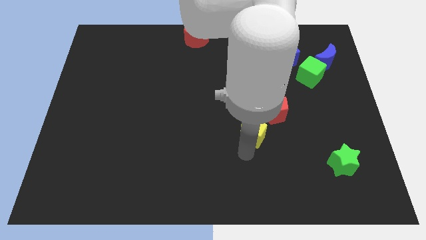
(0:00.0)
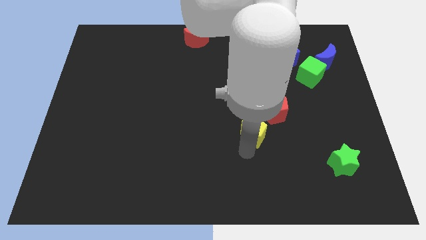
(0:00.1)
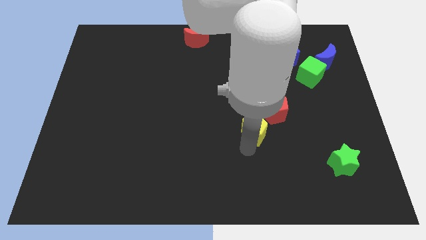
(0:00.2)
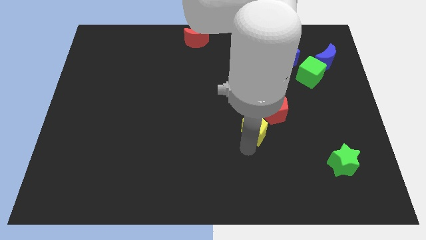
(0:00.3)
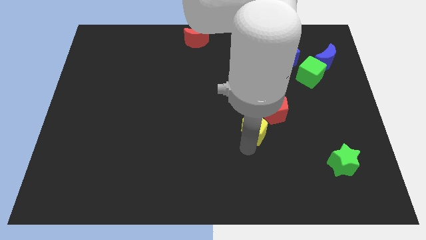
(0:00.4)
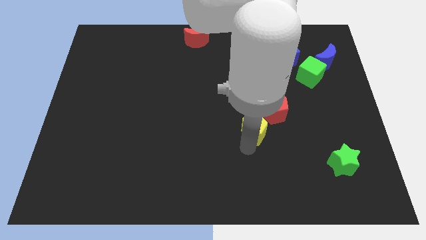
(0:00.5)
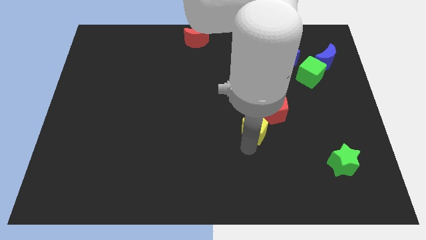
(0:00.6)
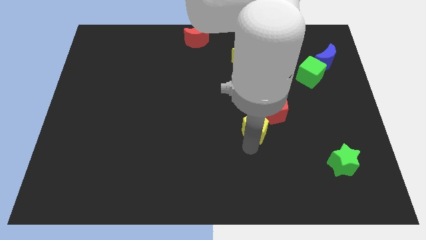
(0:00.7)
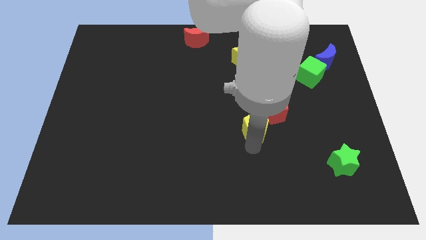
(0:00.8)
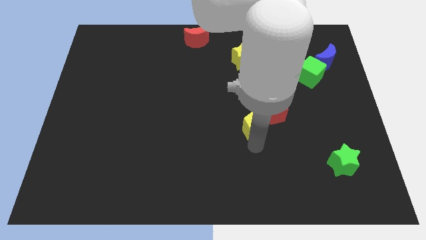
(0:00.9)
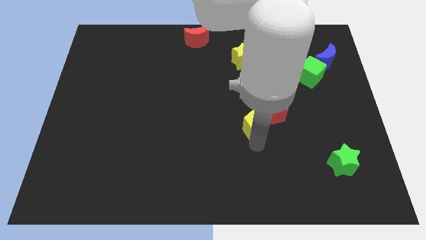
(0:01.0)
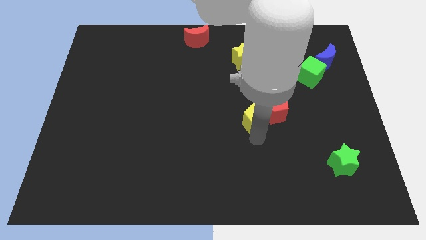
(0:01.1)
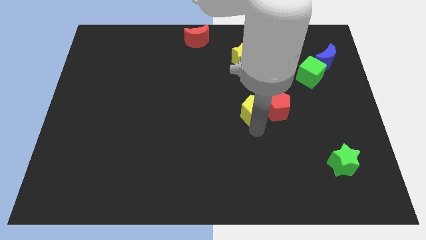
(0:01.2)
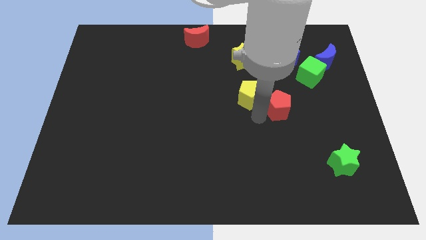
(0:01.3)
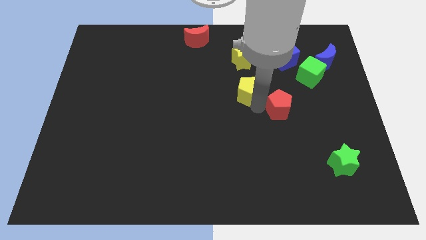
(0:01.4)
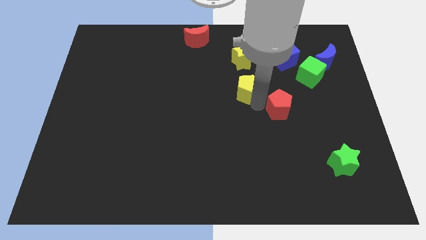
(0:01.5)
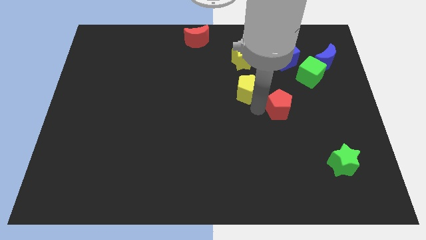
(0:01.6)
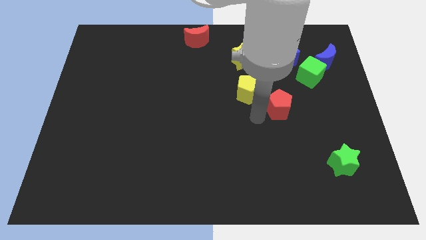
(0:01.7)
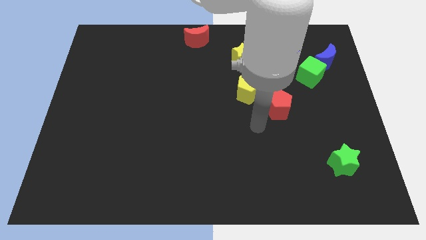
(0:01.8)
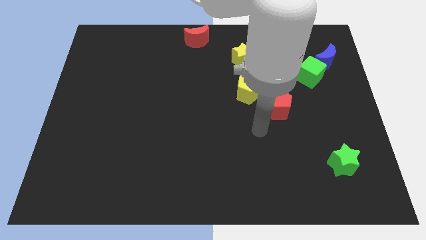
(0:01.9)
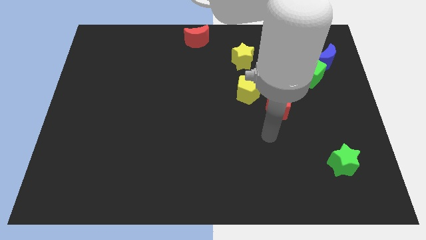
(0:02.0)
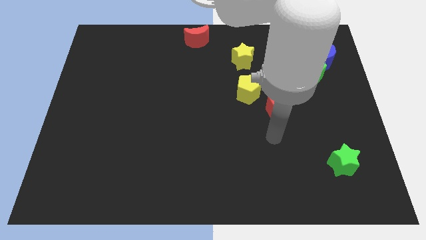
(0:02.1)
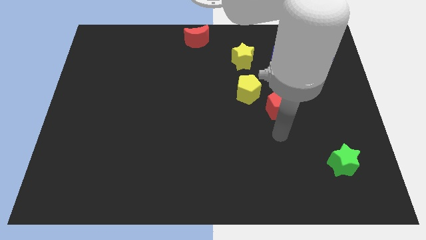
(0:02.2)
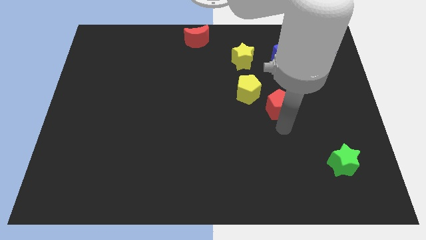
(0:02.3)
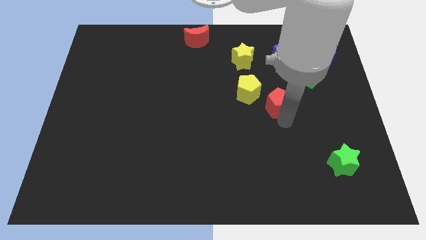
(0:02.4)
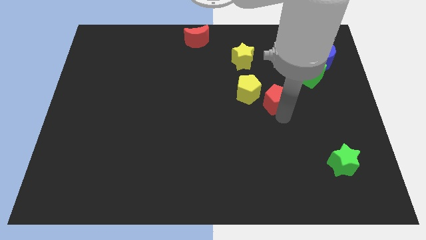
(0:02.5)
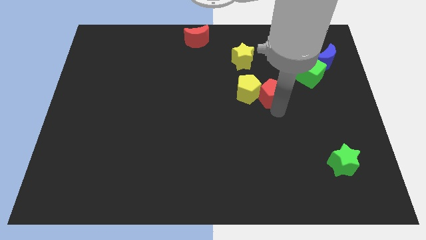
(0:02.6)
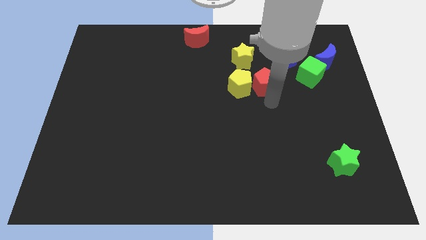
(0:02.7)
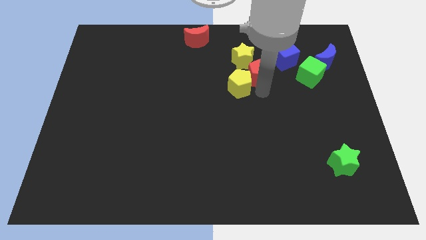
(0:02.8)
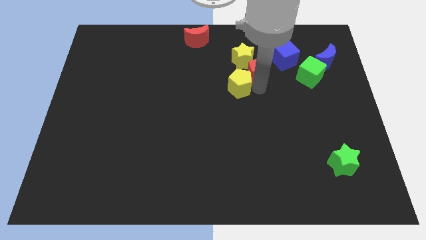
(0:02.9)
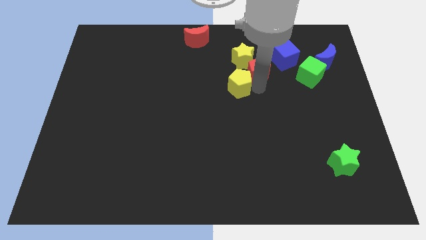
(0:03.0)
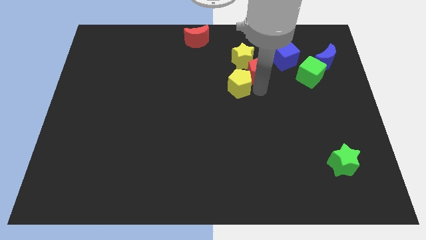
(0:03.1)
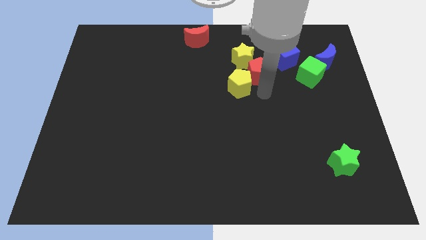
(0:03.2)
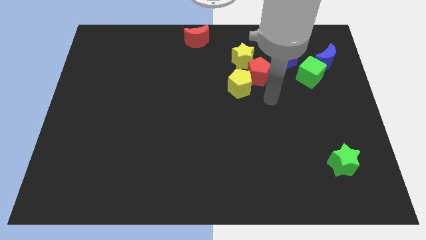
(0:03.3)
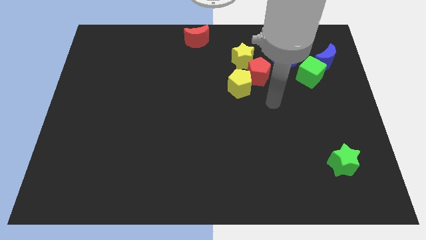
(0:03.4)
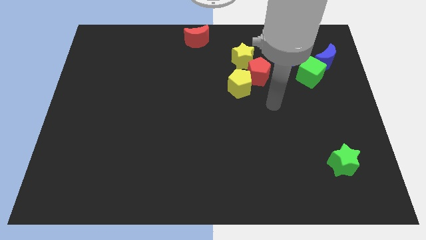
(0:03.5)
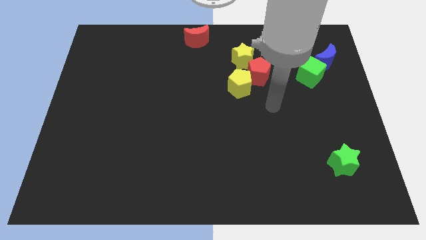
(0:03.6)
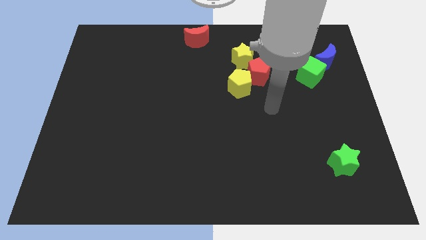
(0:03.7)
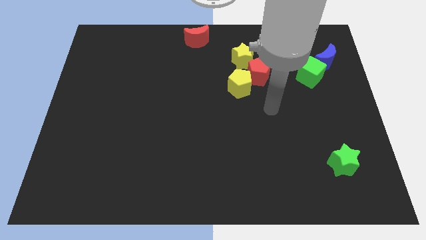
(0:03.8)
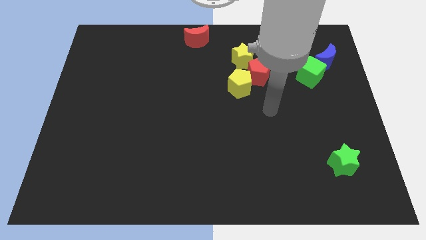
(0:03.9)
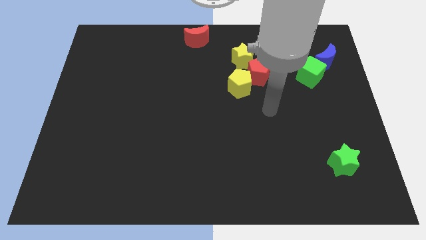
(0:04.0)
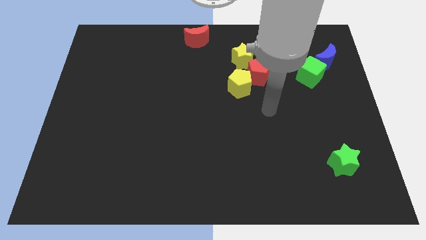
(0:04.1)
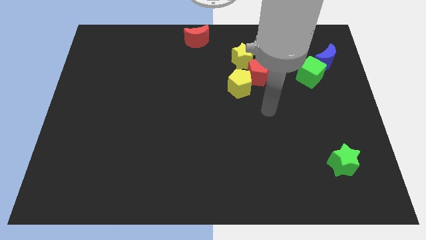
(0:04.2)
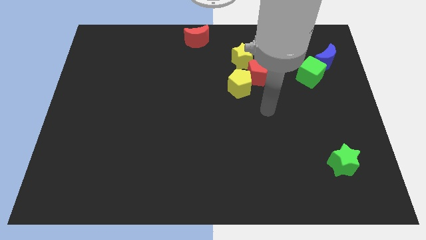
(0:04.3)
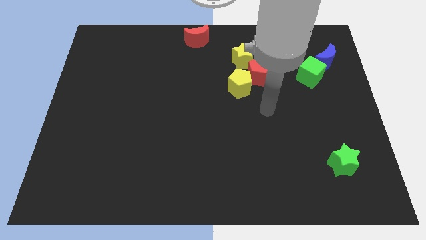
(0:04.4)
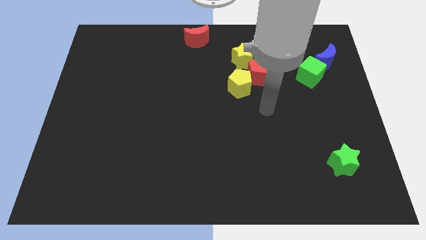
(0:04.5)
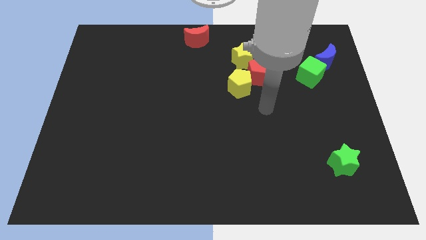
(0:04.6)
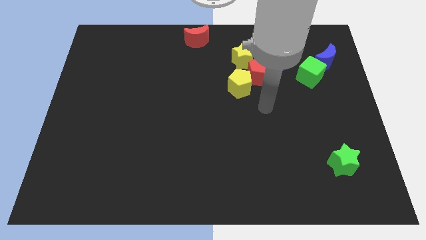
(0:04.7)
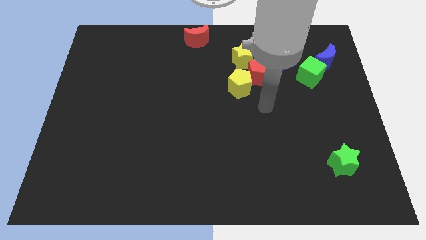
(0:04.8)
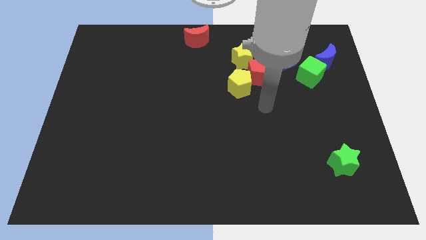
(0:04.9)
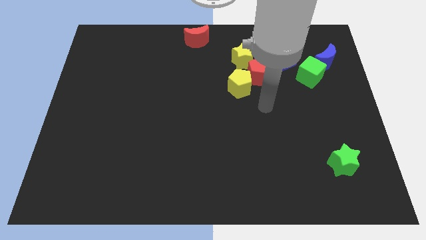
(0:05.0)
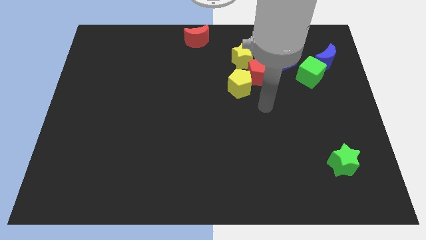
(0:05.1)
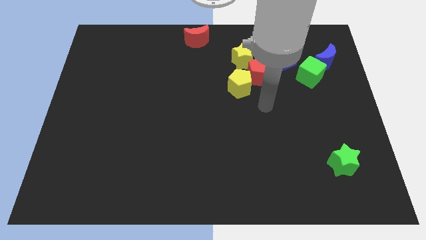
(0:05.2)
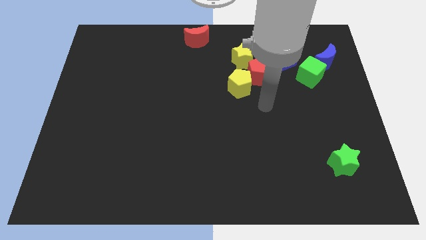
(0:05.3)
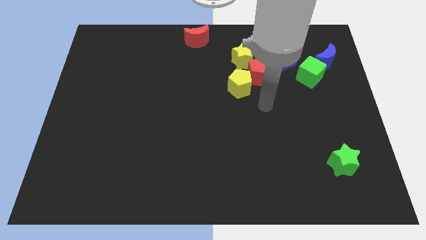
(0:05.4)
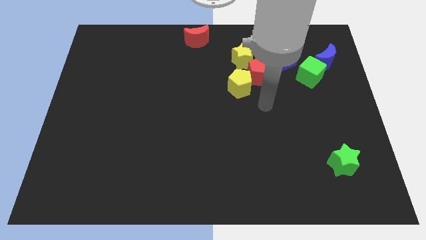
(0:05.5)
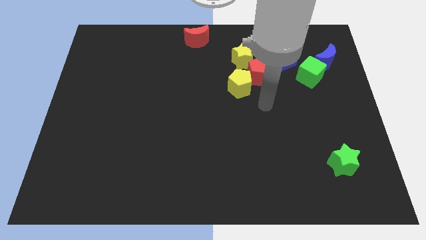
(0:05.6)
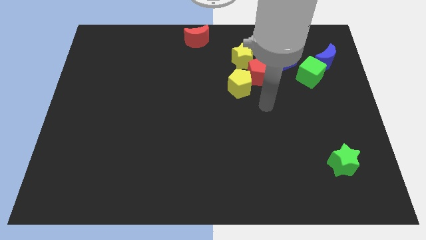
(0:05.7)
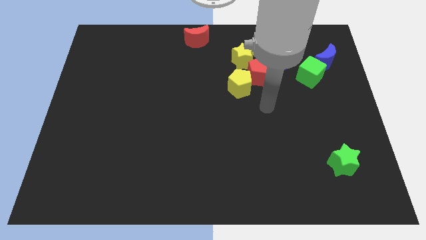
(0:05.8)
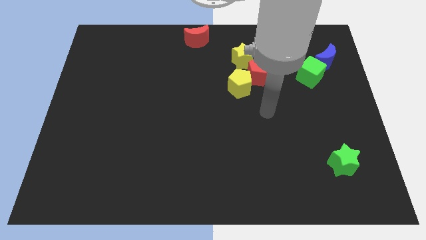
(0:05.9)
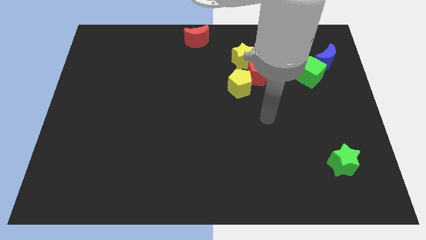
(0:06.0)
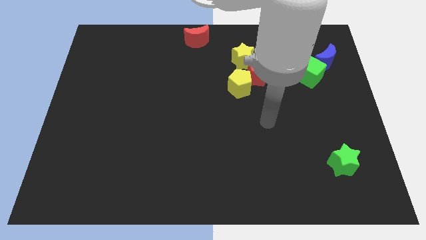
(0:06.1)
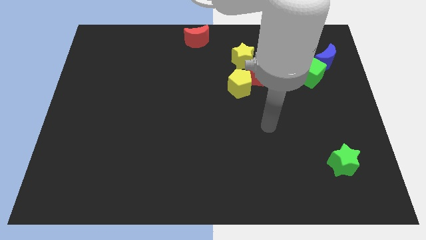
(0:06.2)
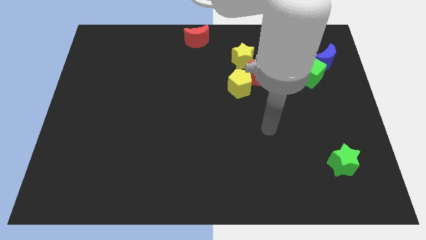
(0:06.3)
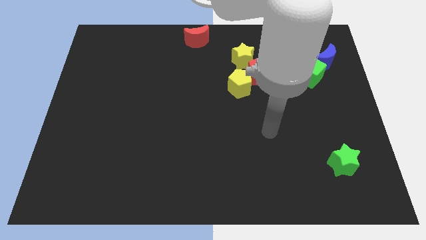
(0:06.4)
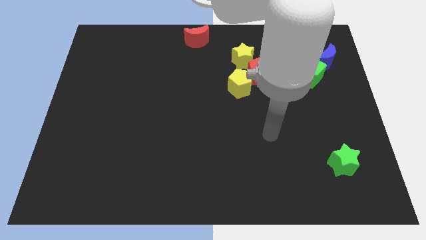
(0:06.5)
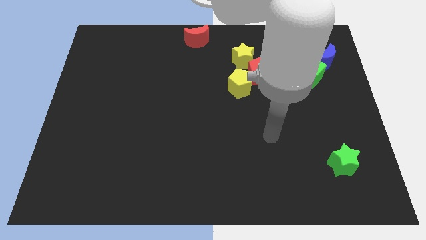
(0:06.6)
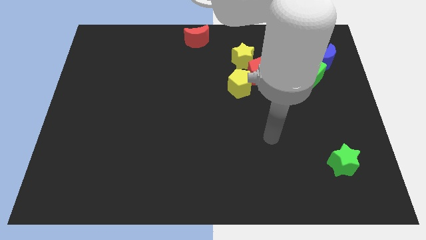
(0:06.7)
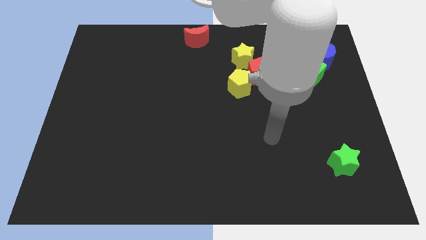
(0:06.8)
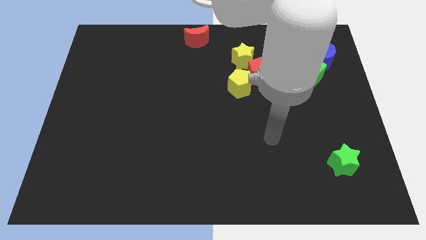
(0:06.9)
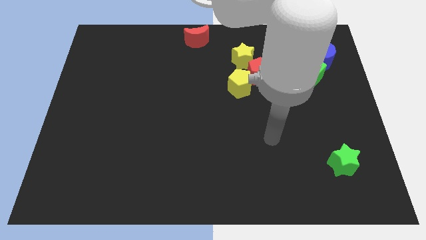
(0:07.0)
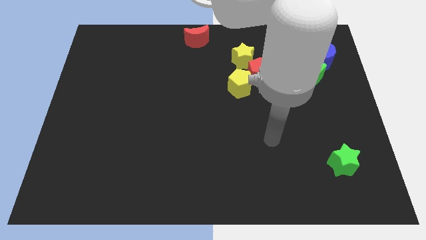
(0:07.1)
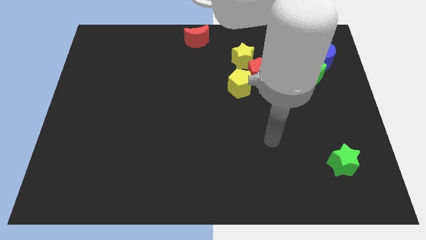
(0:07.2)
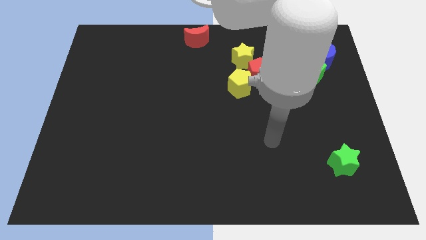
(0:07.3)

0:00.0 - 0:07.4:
place the yellow pentagon and the red pentagon below the yellow star

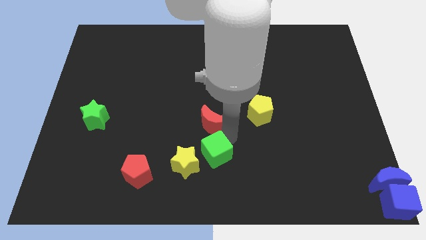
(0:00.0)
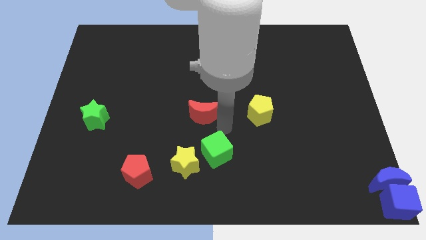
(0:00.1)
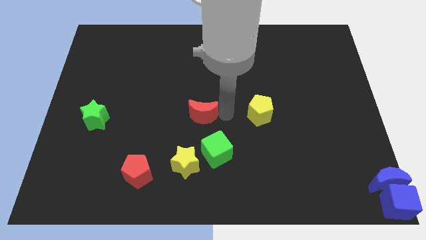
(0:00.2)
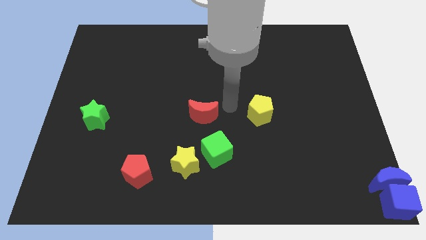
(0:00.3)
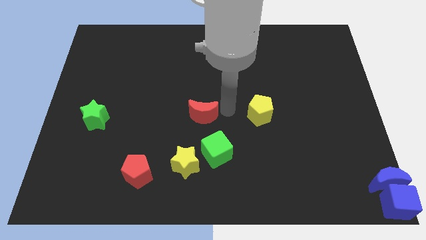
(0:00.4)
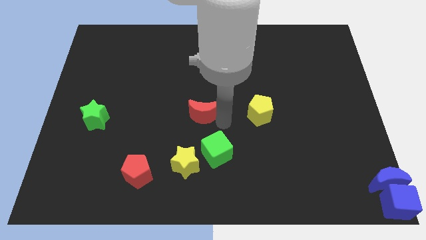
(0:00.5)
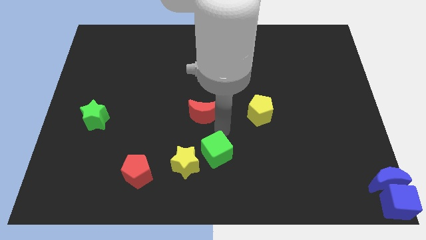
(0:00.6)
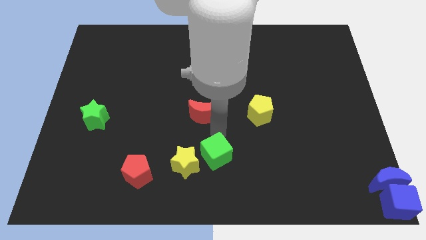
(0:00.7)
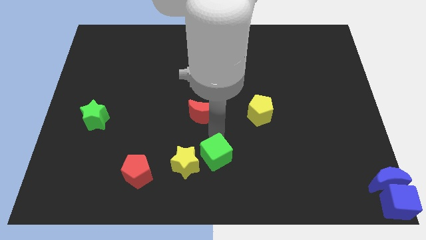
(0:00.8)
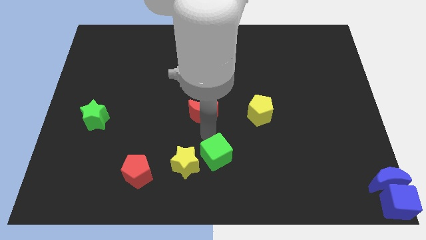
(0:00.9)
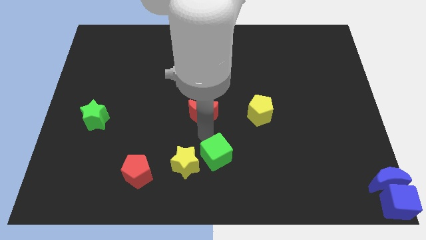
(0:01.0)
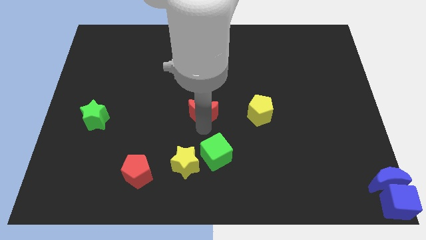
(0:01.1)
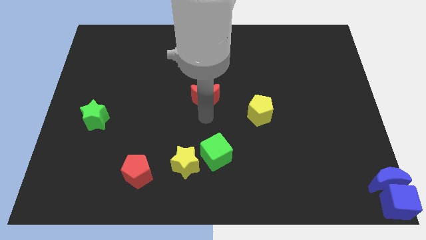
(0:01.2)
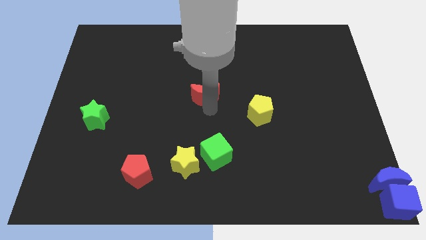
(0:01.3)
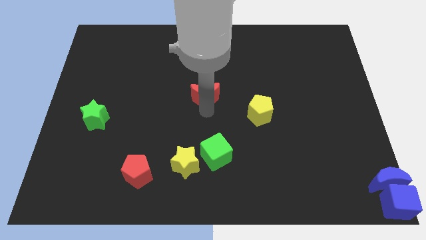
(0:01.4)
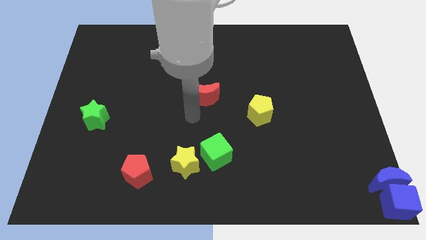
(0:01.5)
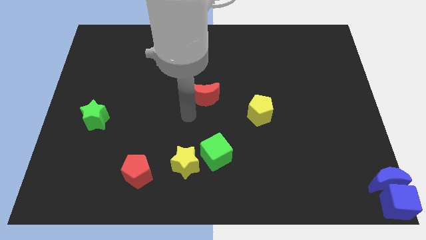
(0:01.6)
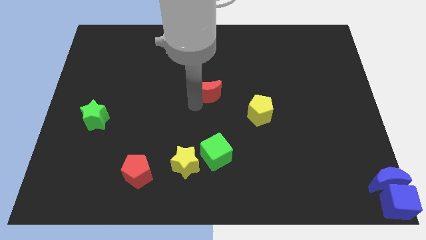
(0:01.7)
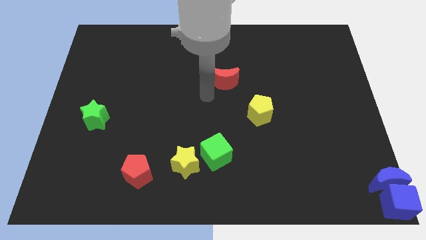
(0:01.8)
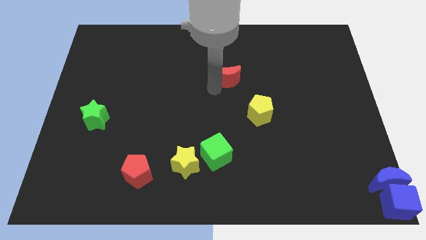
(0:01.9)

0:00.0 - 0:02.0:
push the red moon above the green cube
